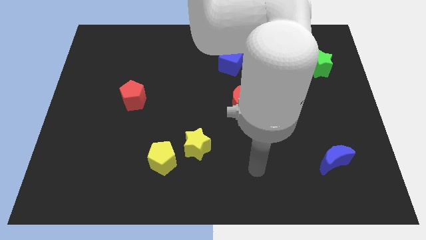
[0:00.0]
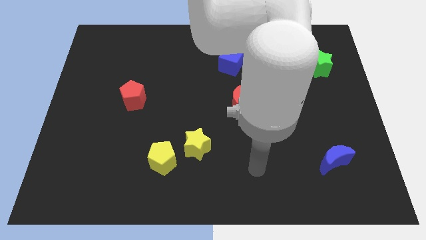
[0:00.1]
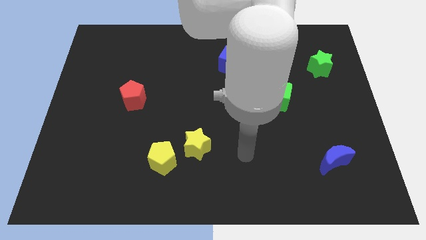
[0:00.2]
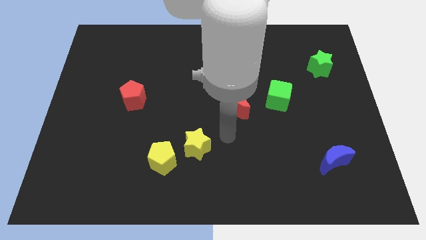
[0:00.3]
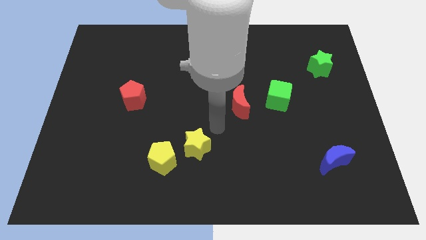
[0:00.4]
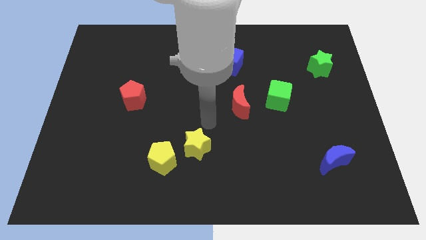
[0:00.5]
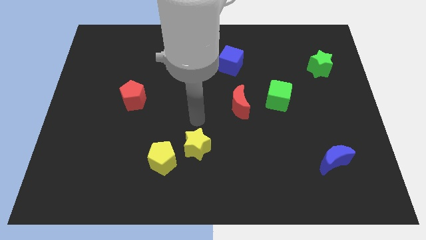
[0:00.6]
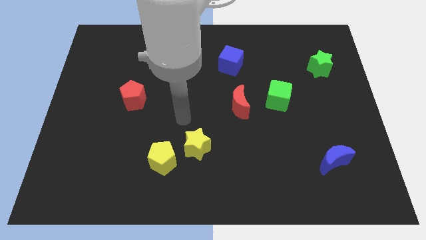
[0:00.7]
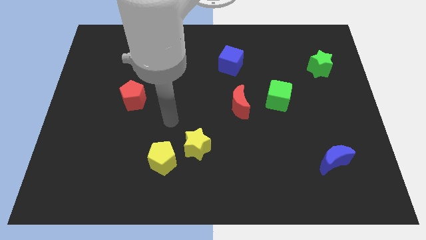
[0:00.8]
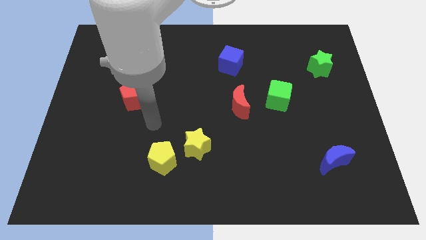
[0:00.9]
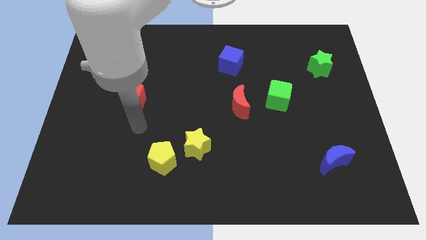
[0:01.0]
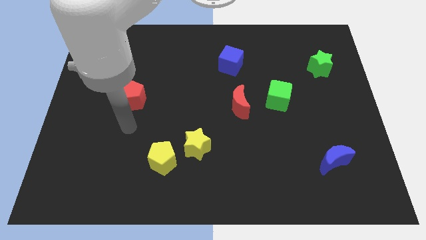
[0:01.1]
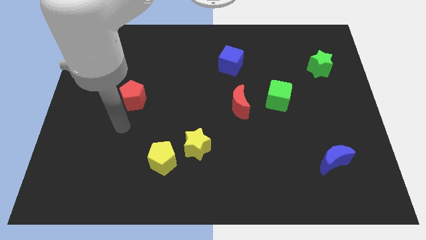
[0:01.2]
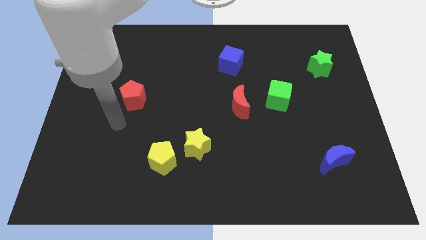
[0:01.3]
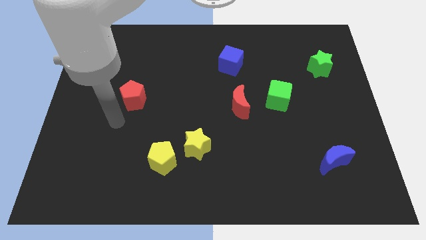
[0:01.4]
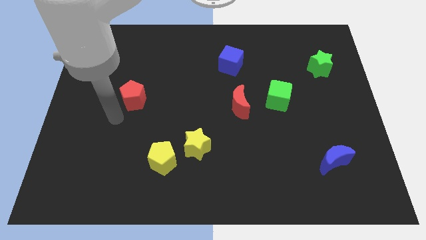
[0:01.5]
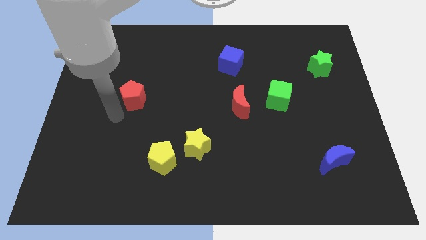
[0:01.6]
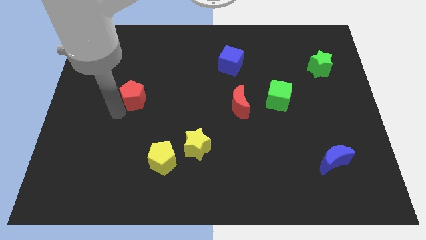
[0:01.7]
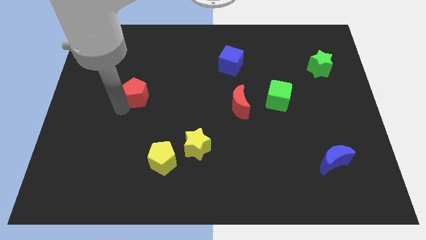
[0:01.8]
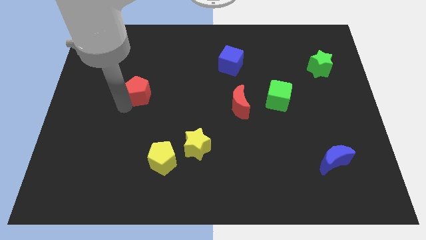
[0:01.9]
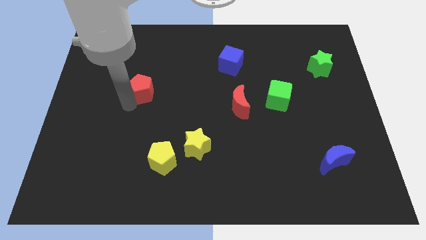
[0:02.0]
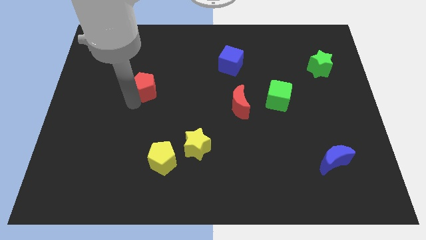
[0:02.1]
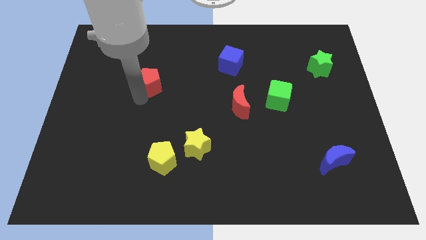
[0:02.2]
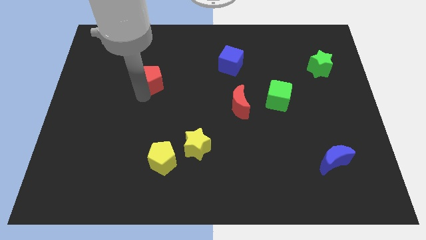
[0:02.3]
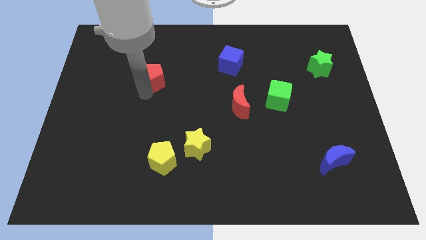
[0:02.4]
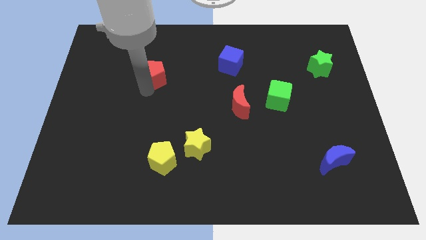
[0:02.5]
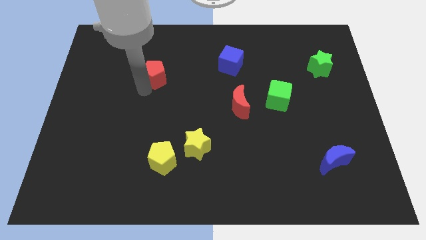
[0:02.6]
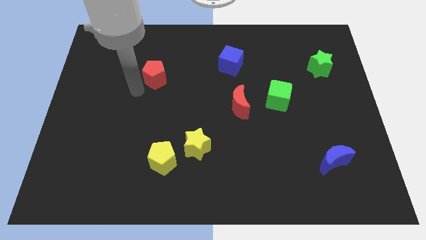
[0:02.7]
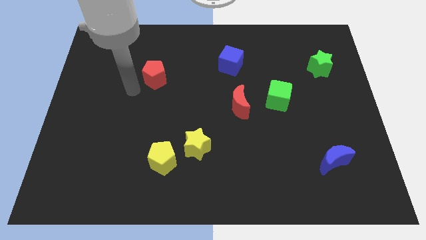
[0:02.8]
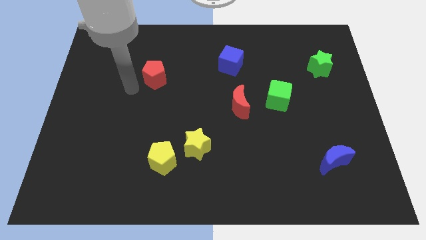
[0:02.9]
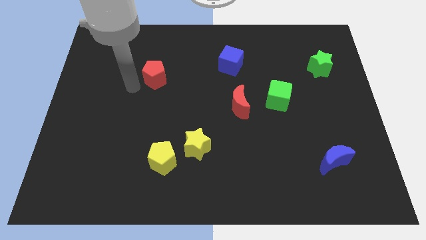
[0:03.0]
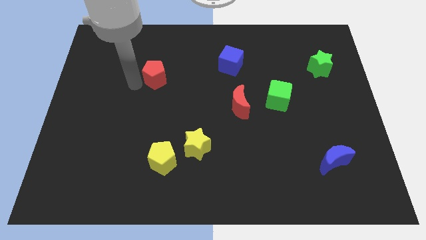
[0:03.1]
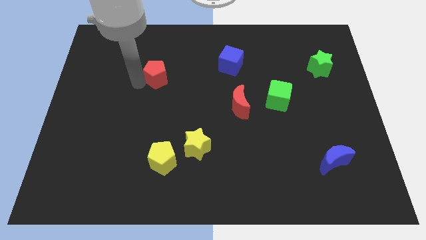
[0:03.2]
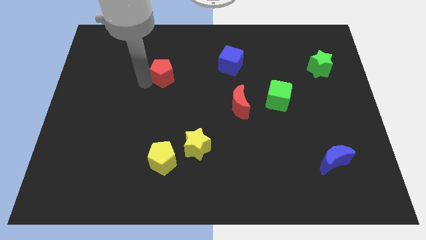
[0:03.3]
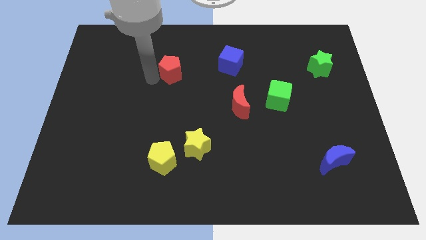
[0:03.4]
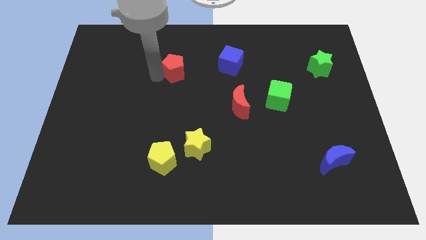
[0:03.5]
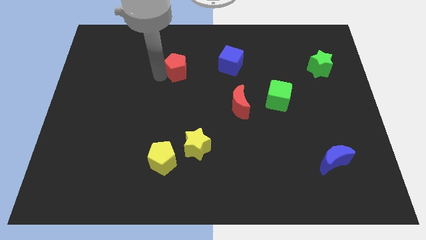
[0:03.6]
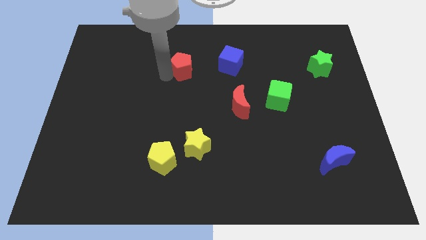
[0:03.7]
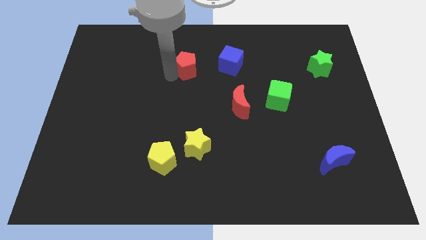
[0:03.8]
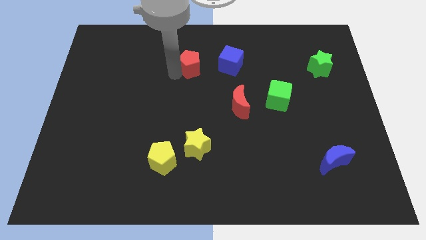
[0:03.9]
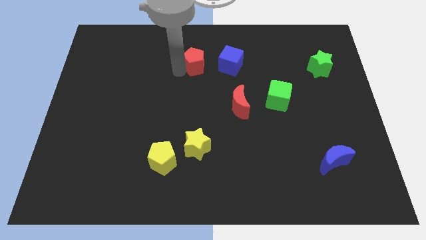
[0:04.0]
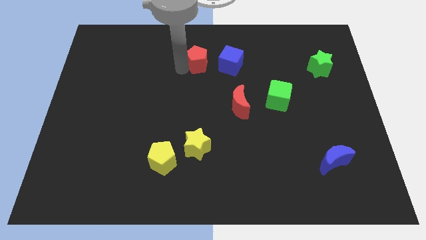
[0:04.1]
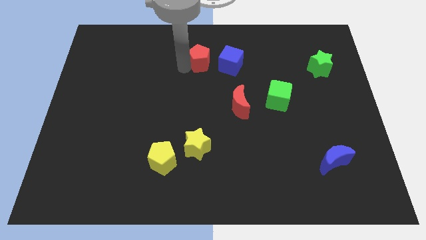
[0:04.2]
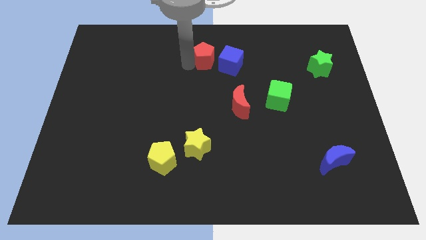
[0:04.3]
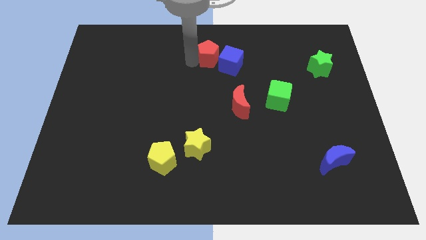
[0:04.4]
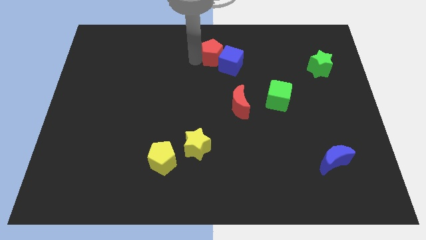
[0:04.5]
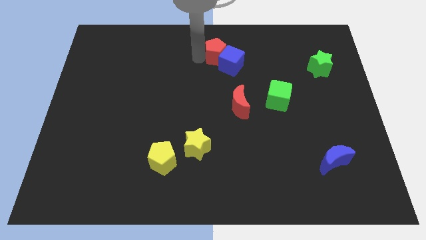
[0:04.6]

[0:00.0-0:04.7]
move the red pentagon to the blue cube

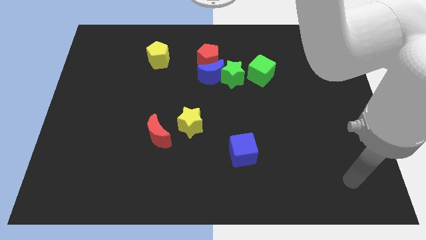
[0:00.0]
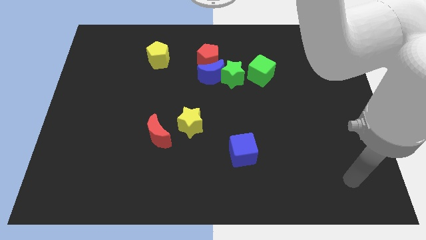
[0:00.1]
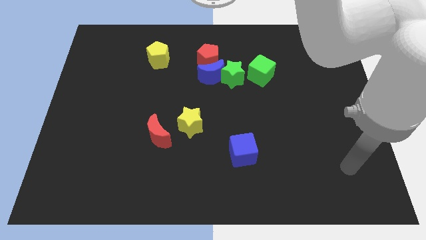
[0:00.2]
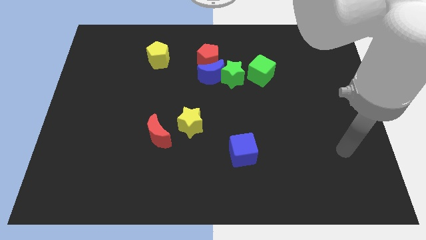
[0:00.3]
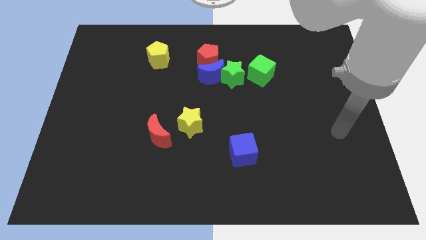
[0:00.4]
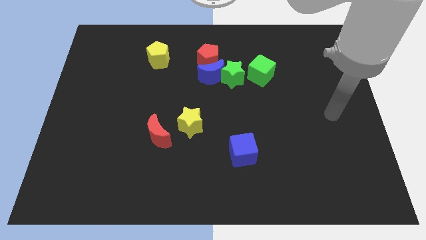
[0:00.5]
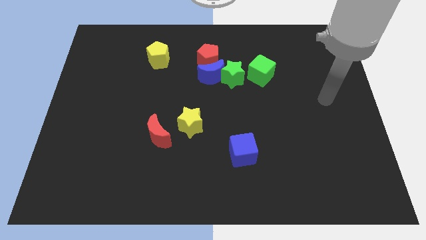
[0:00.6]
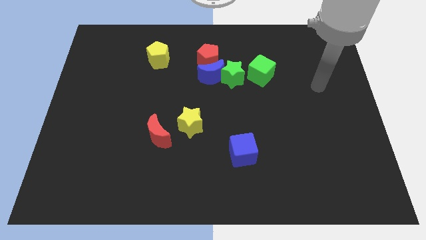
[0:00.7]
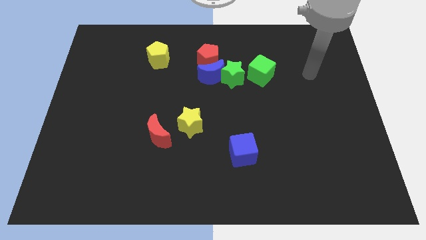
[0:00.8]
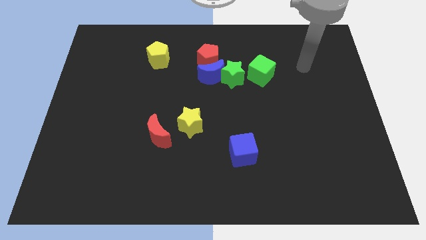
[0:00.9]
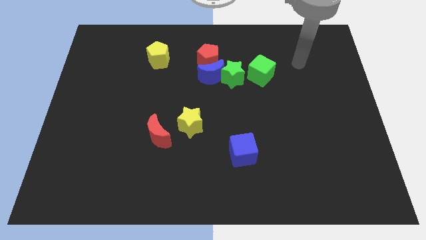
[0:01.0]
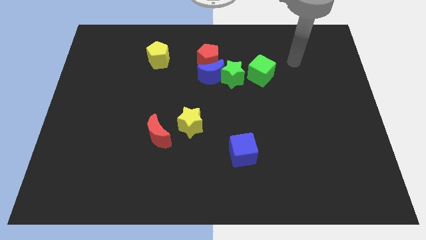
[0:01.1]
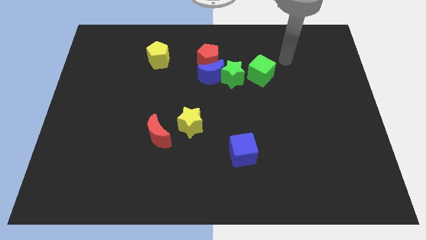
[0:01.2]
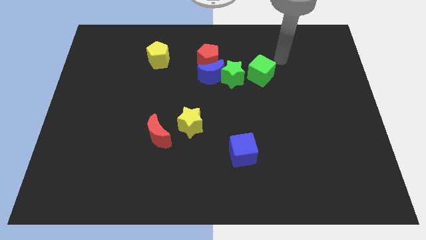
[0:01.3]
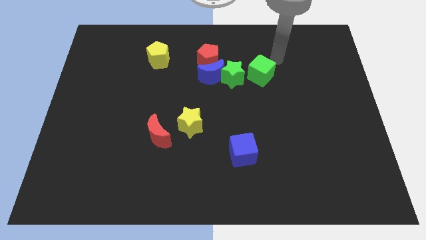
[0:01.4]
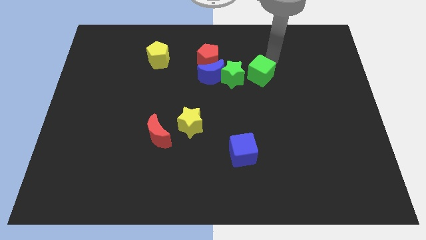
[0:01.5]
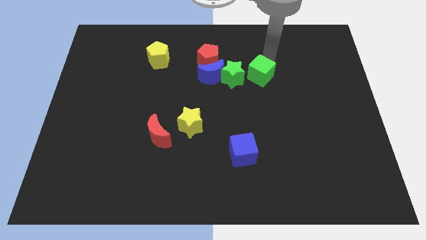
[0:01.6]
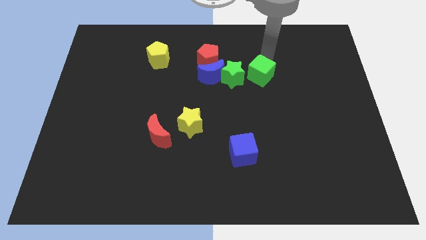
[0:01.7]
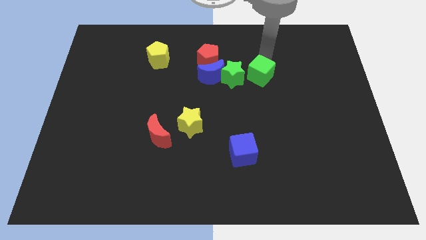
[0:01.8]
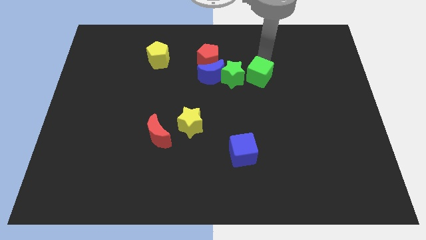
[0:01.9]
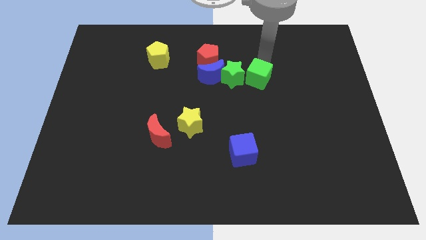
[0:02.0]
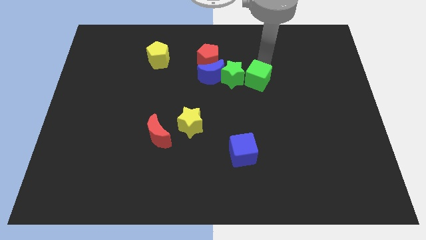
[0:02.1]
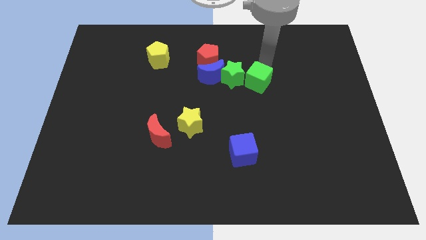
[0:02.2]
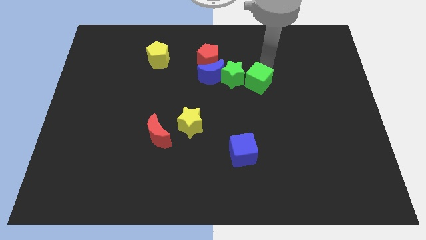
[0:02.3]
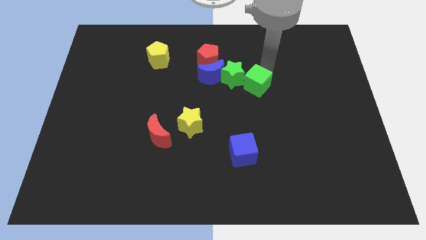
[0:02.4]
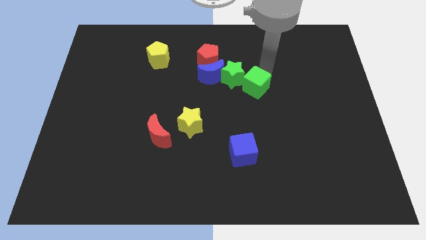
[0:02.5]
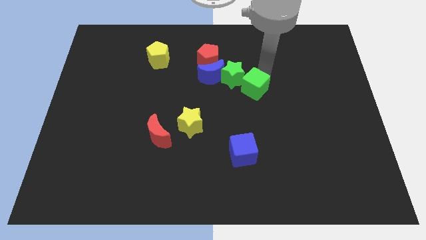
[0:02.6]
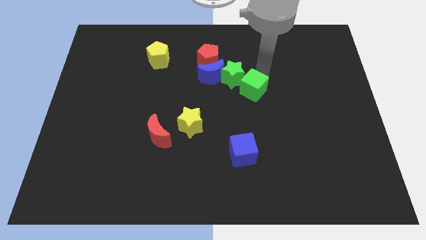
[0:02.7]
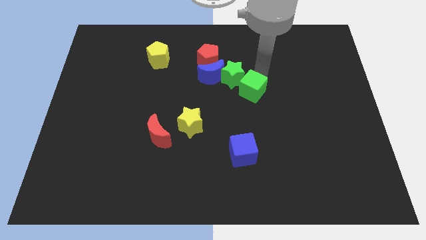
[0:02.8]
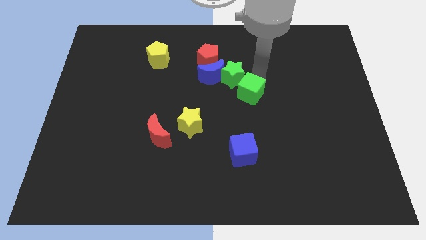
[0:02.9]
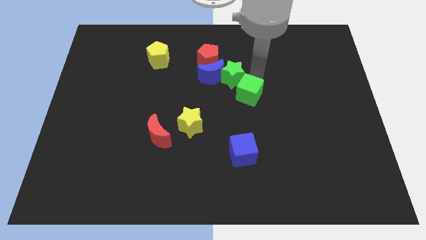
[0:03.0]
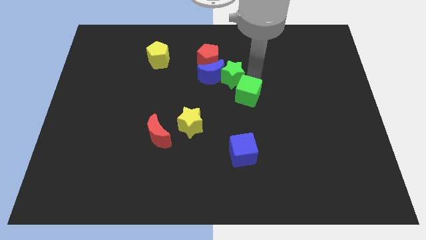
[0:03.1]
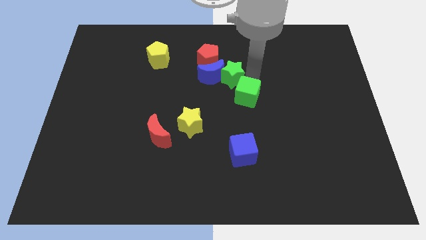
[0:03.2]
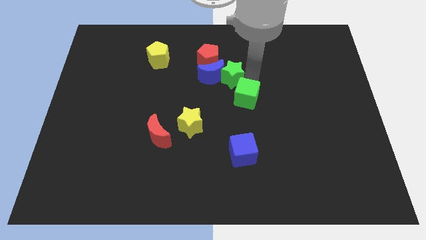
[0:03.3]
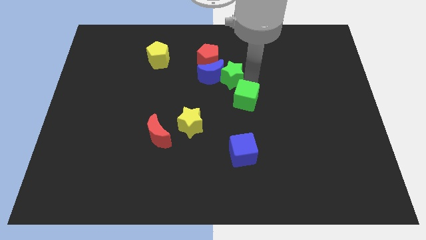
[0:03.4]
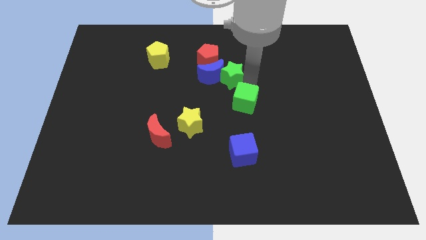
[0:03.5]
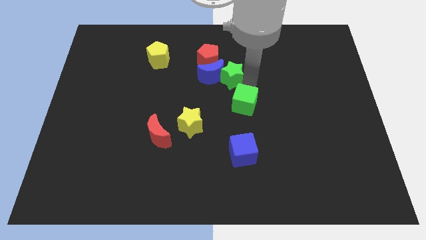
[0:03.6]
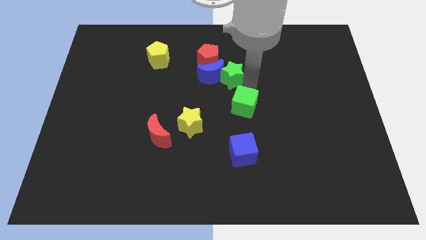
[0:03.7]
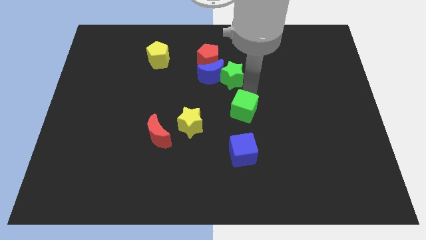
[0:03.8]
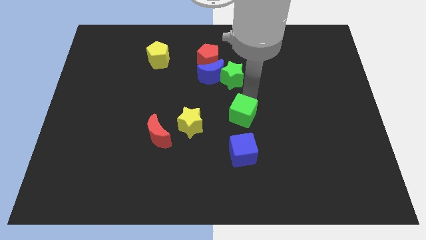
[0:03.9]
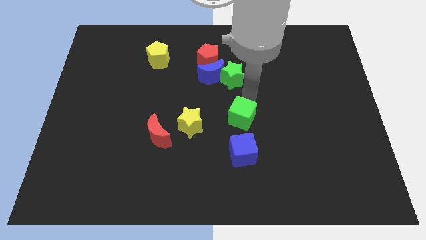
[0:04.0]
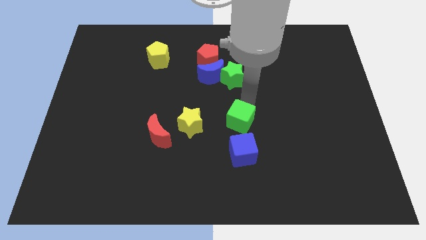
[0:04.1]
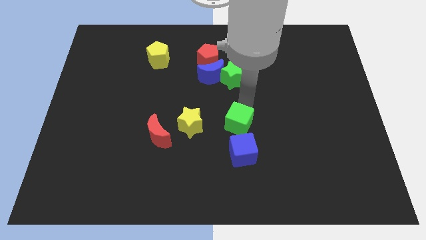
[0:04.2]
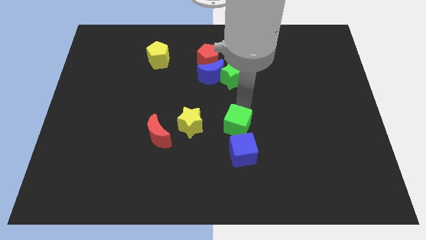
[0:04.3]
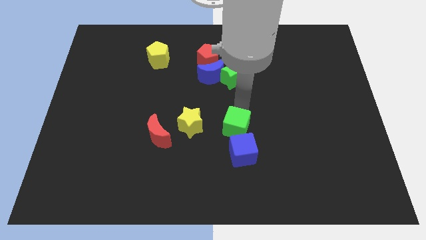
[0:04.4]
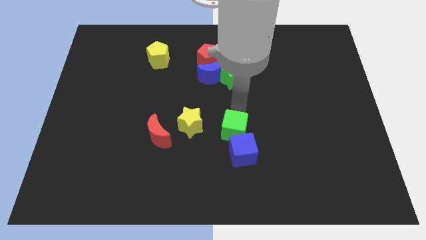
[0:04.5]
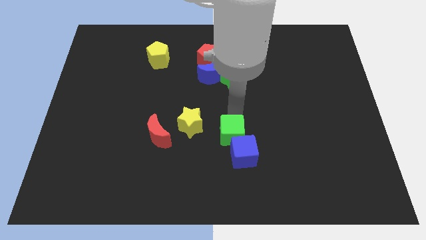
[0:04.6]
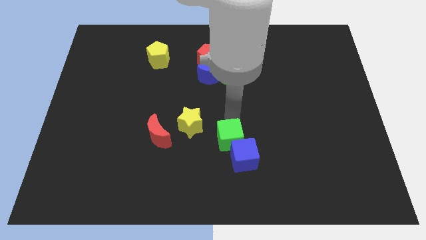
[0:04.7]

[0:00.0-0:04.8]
slide the green cube towards the blue cube
